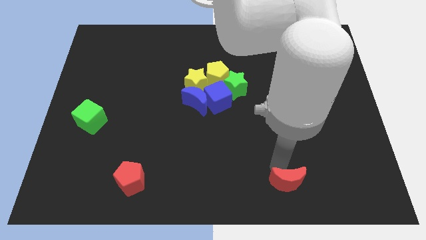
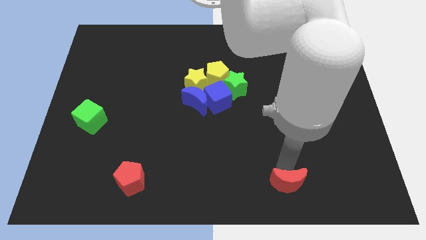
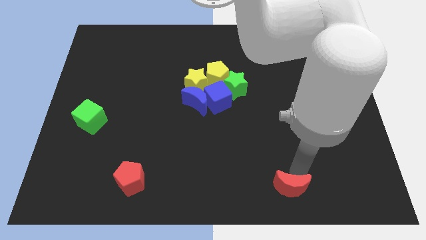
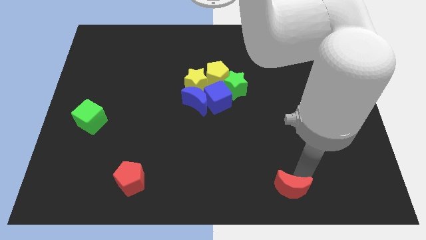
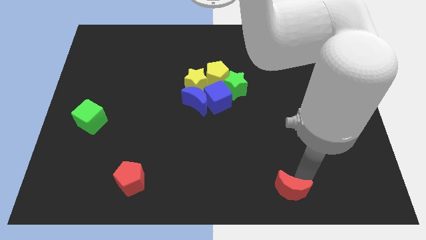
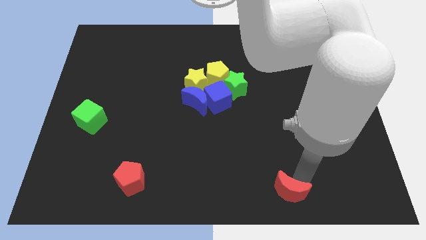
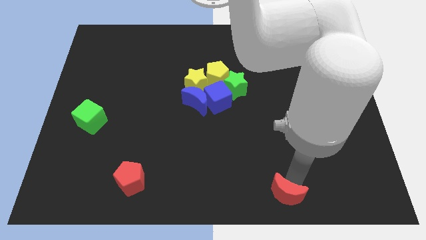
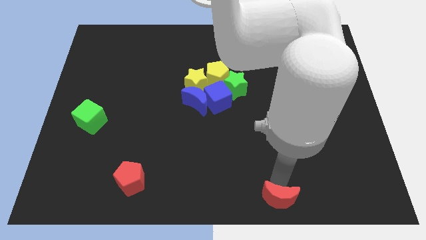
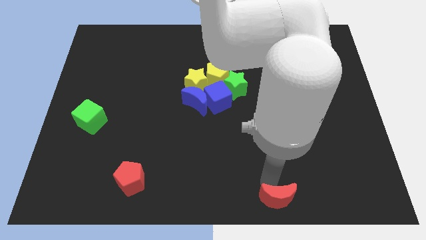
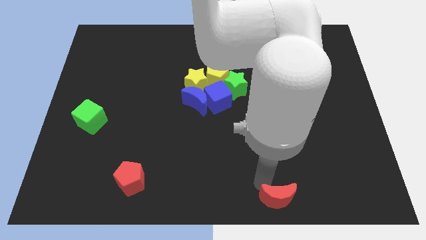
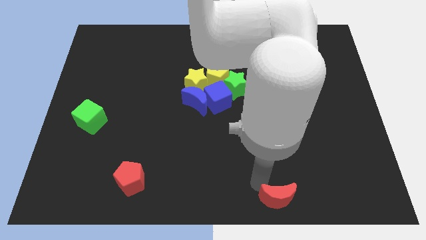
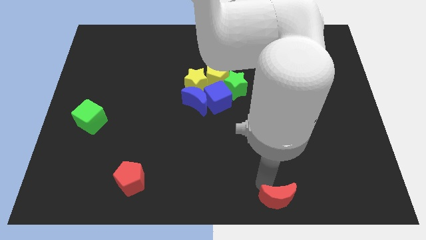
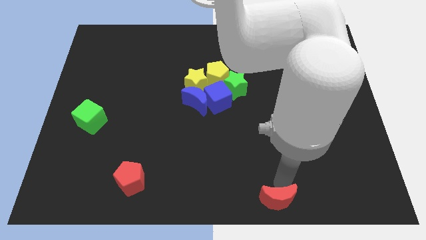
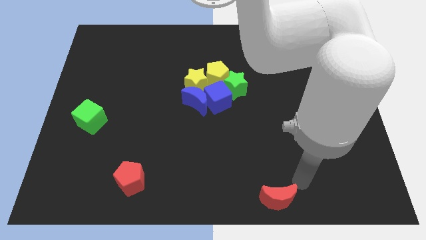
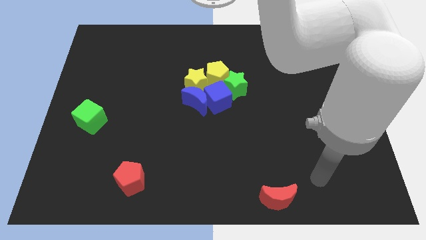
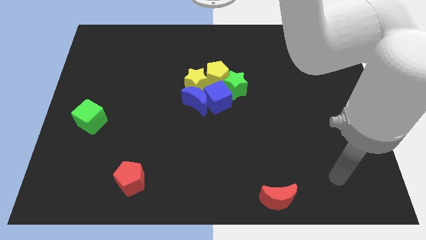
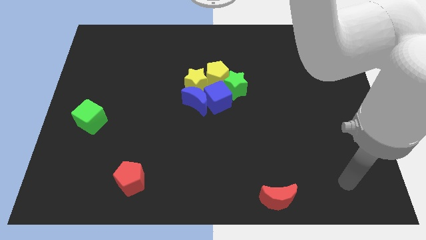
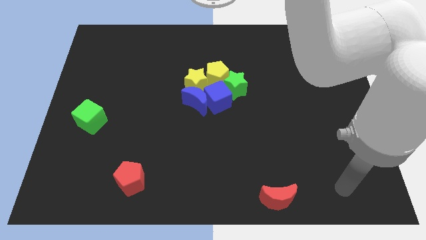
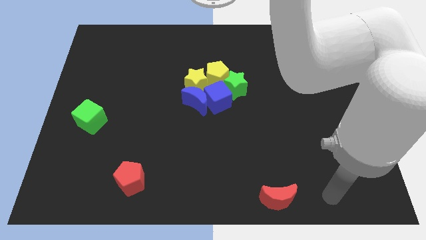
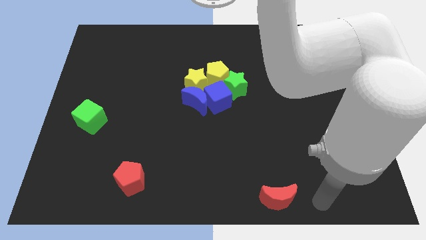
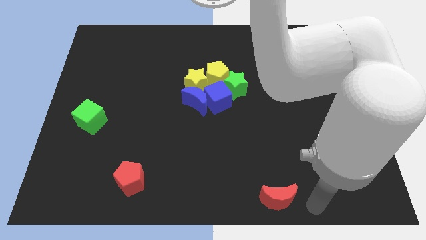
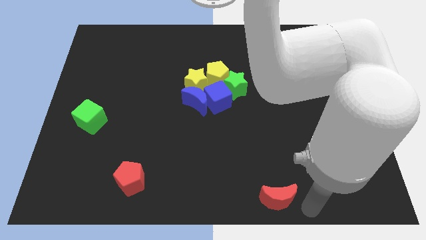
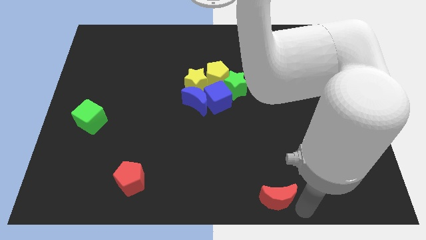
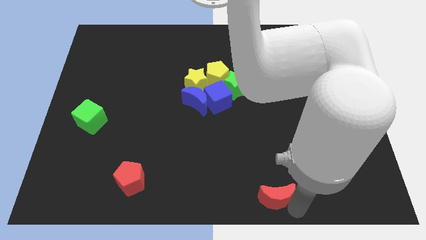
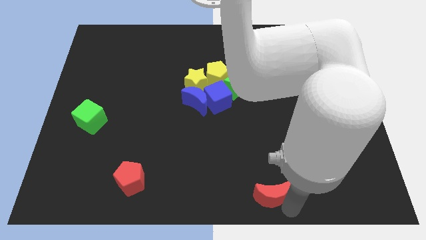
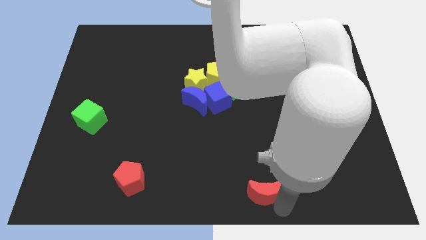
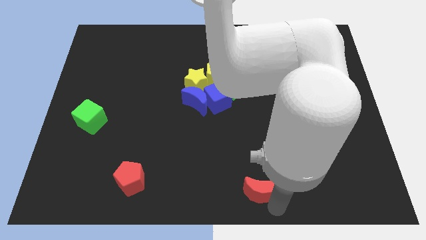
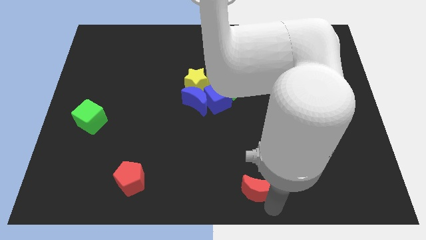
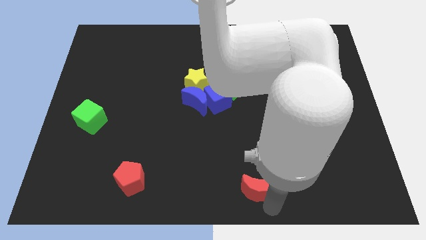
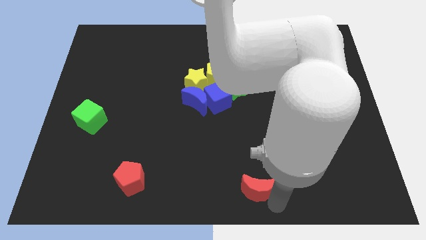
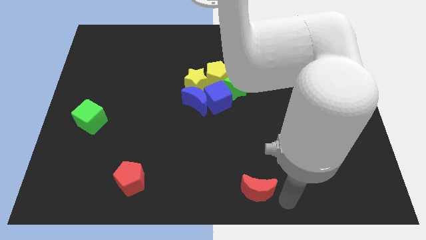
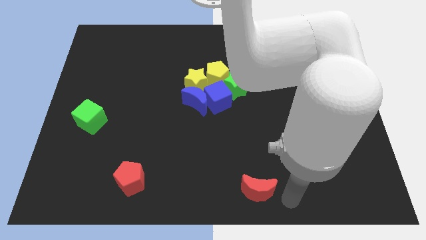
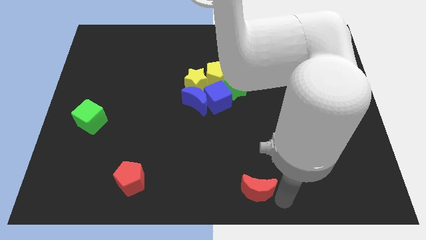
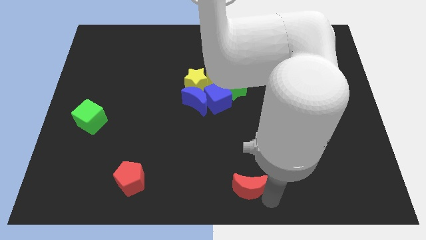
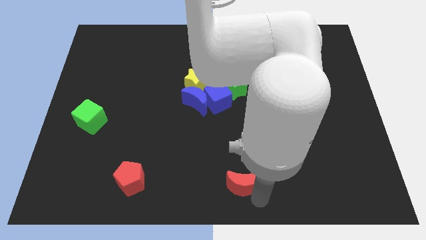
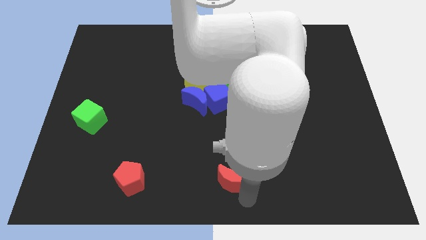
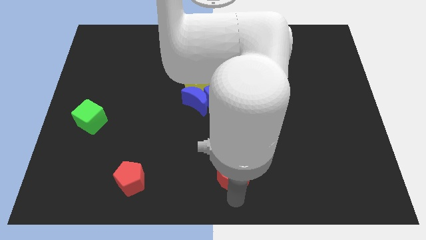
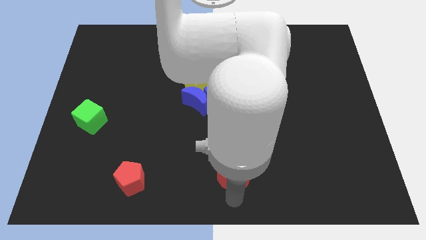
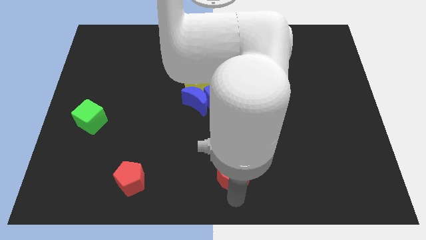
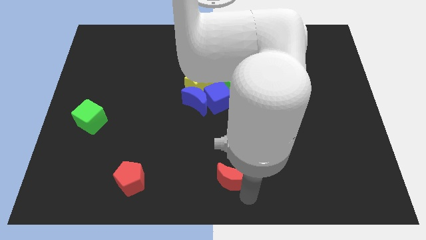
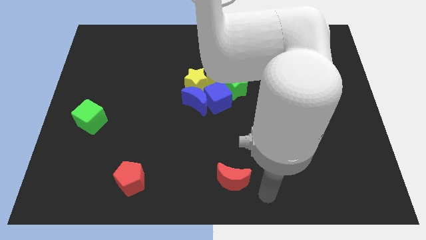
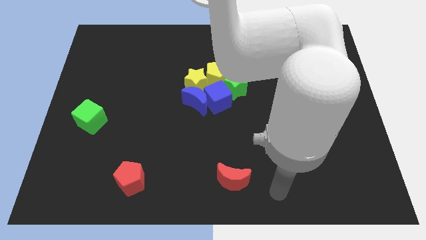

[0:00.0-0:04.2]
move the red moon slightly left

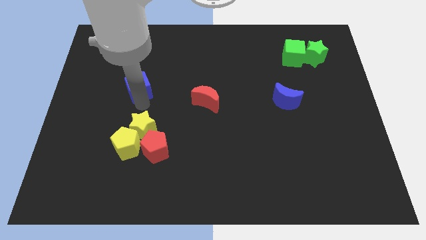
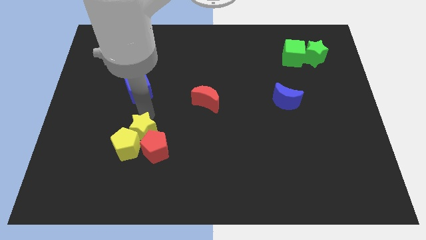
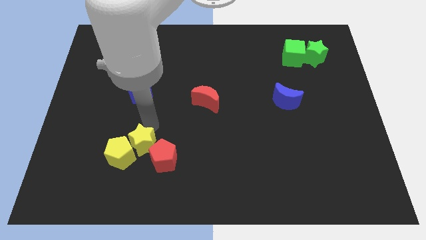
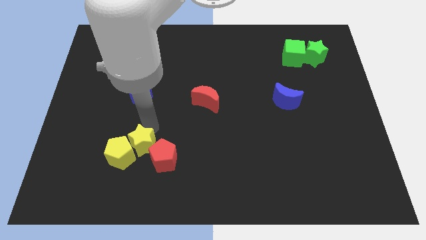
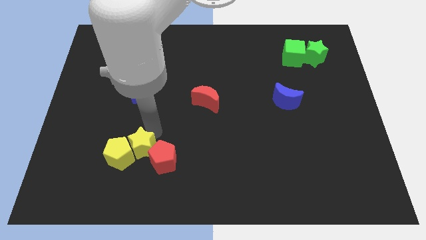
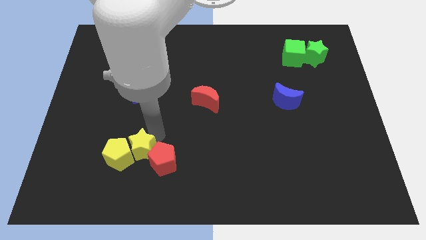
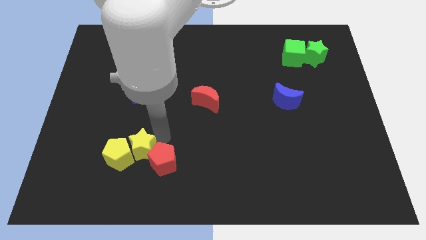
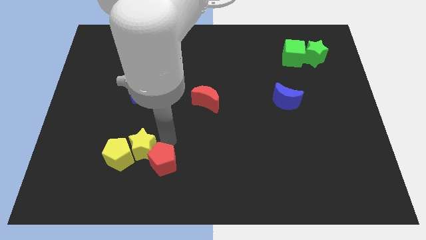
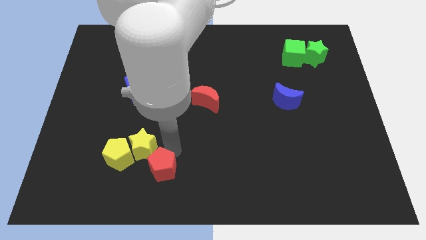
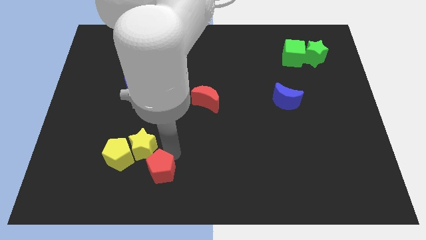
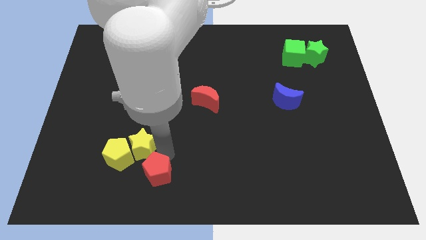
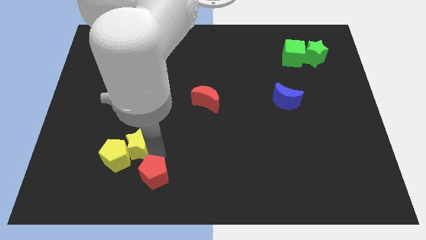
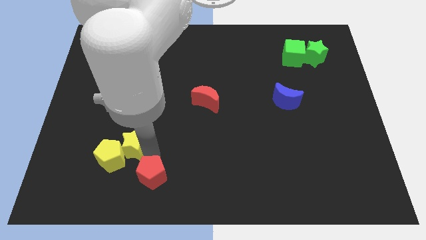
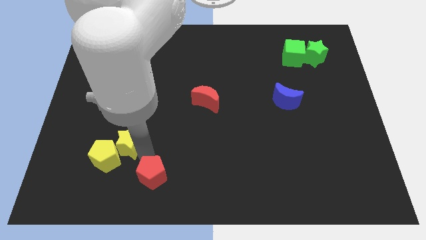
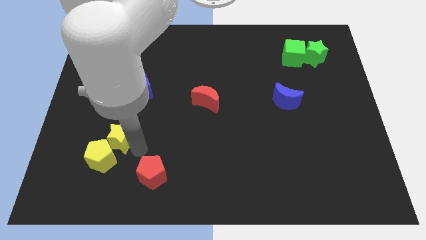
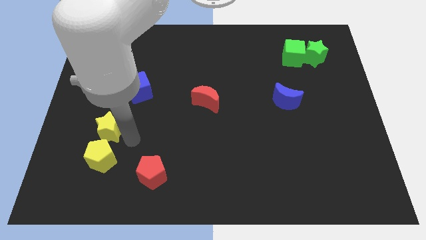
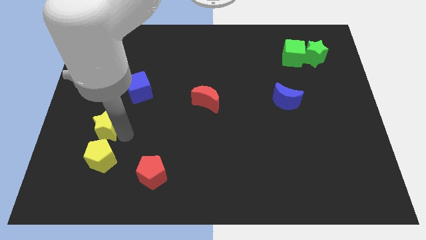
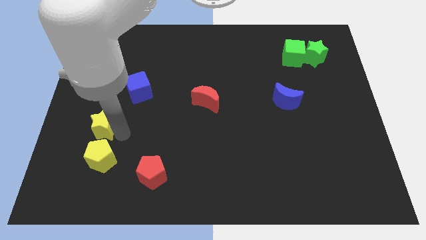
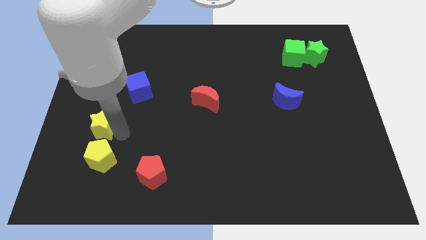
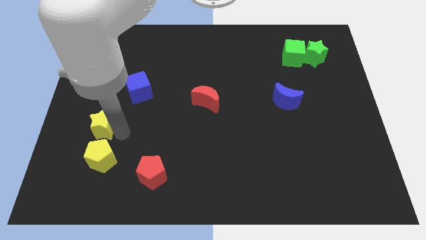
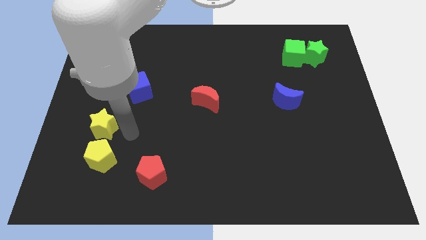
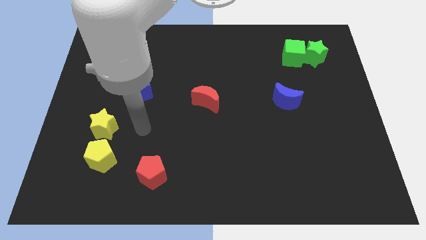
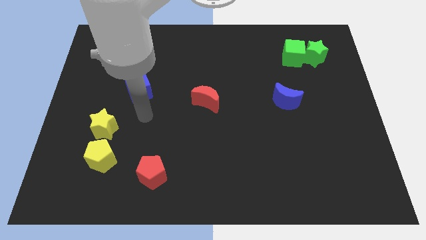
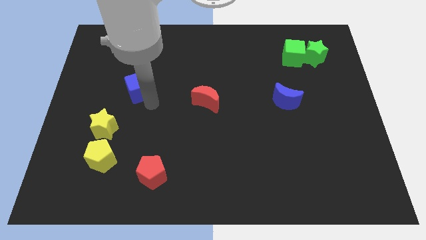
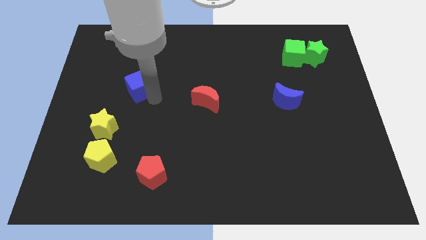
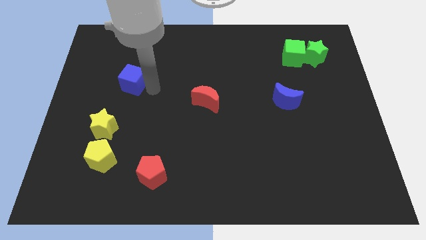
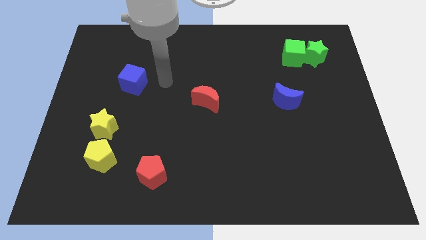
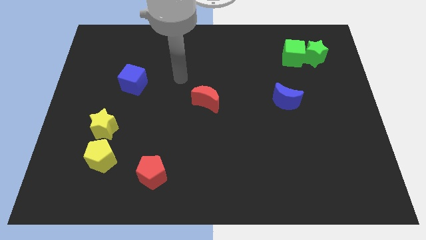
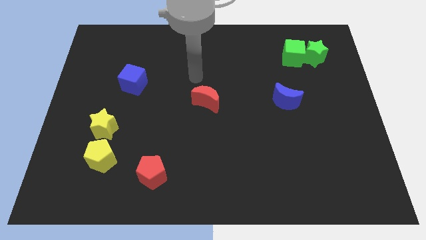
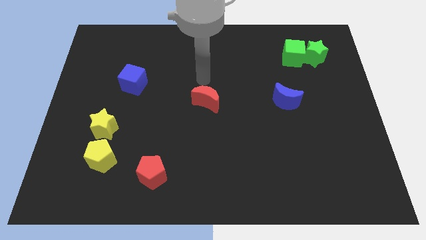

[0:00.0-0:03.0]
place yellow blocks and the blue cube in a vertical line

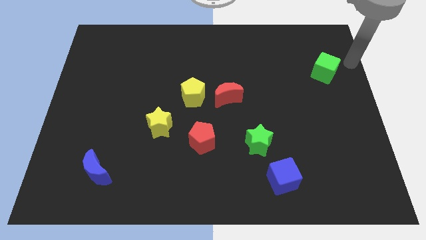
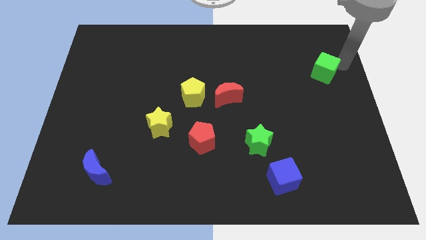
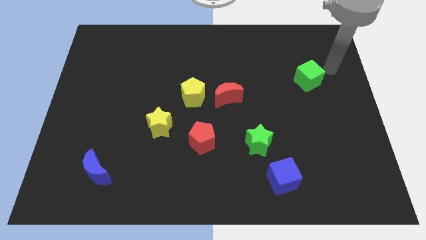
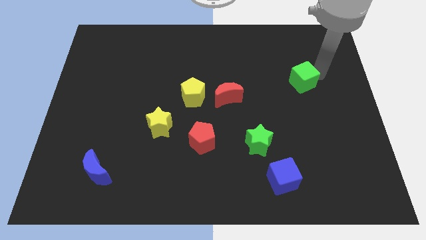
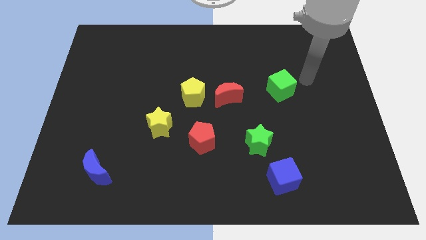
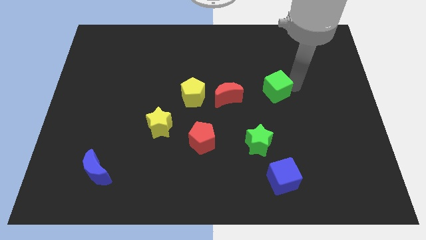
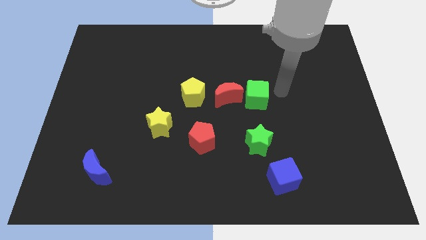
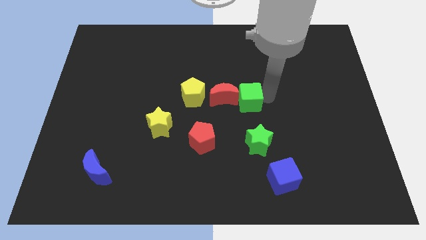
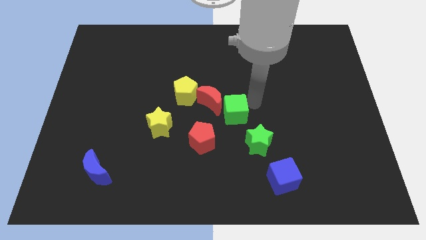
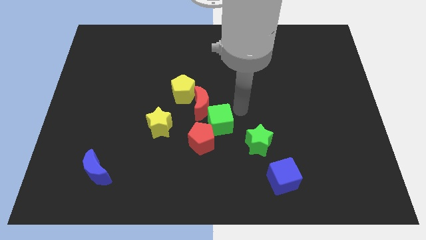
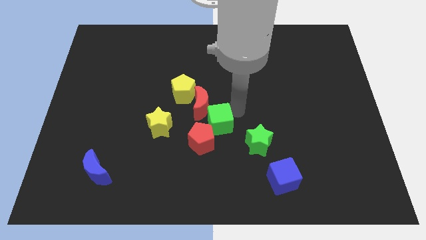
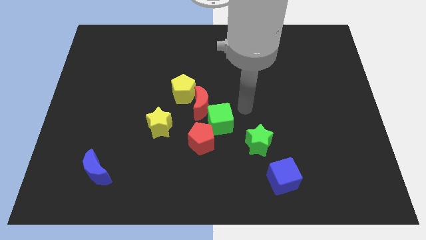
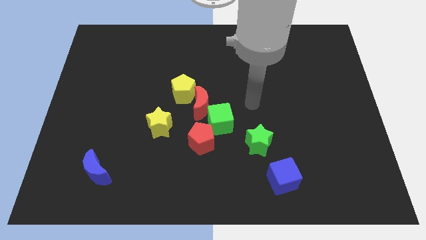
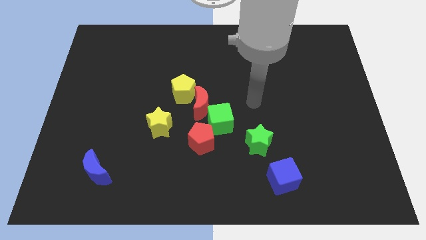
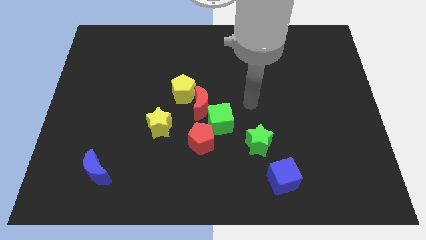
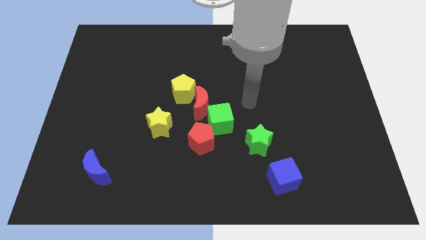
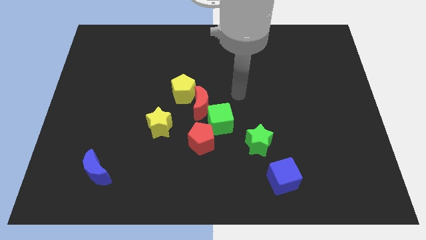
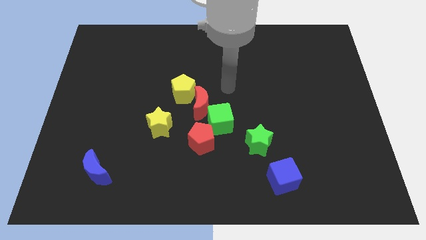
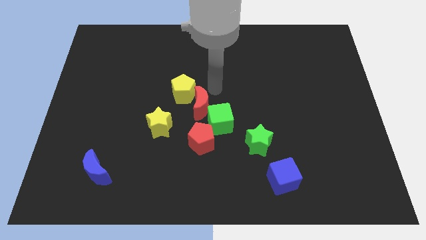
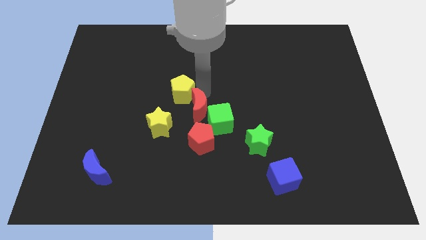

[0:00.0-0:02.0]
push the green cube into the red blocks
